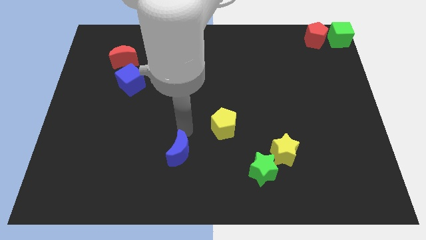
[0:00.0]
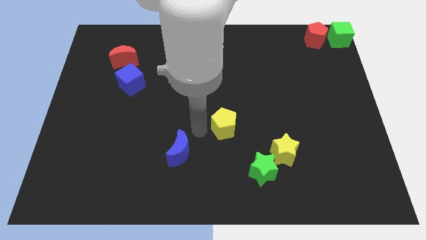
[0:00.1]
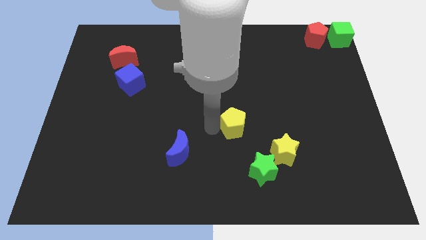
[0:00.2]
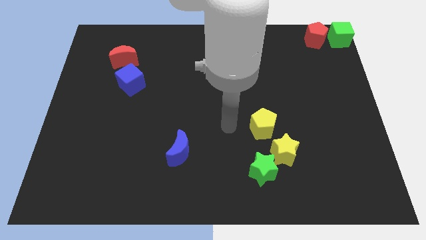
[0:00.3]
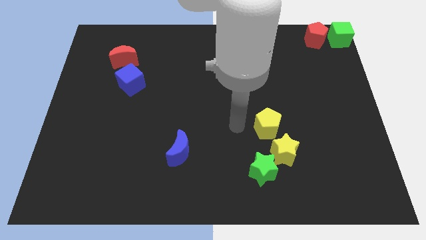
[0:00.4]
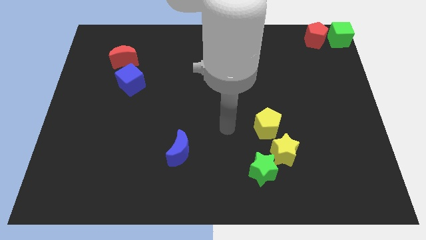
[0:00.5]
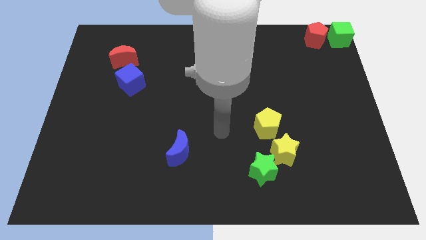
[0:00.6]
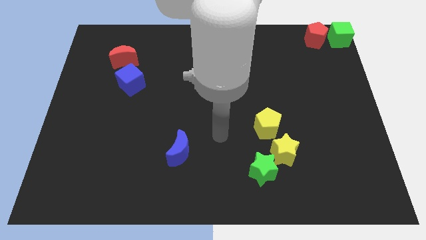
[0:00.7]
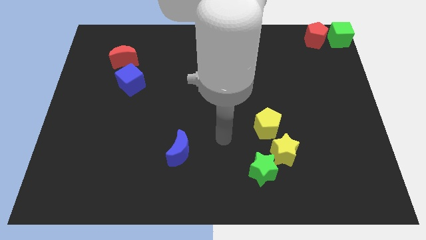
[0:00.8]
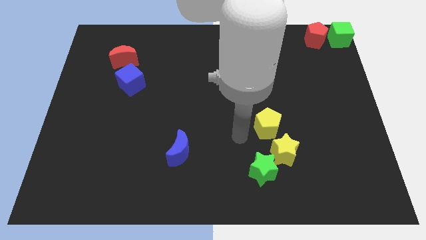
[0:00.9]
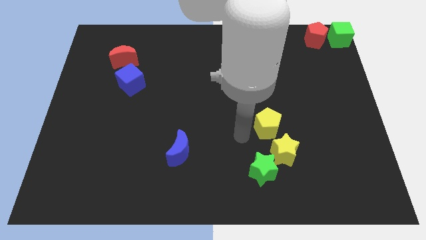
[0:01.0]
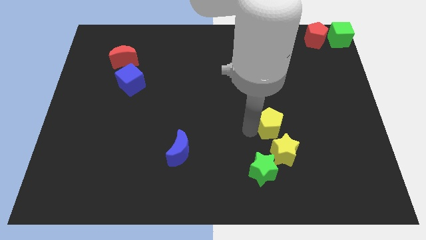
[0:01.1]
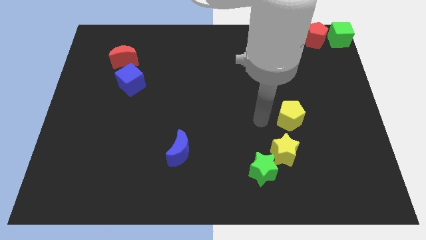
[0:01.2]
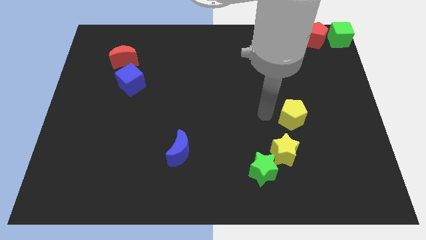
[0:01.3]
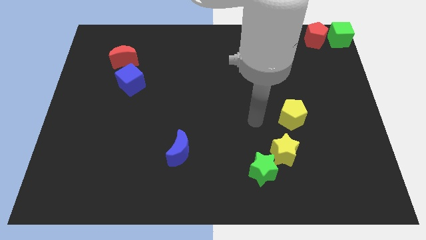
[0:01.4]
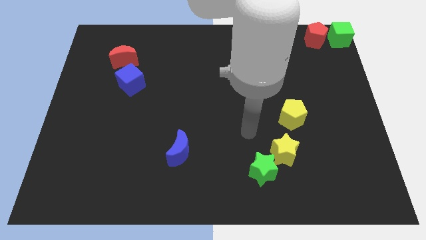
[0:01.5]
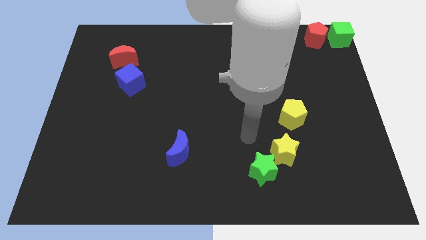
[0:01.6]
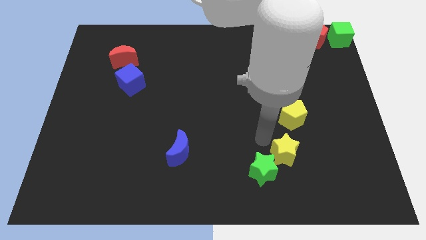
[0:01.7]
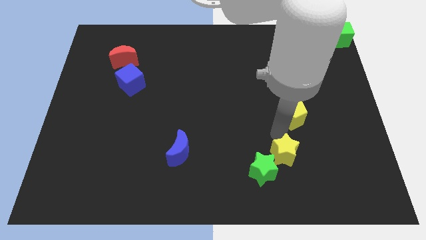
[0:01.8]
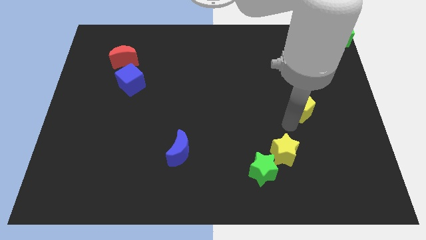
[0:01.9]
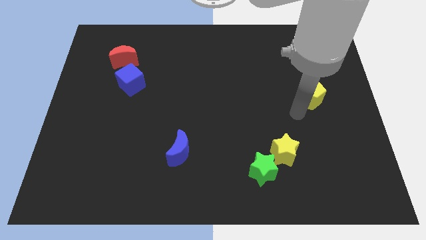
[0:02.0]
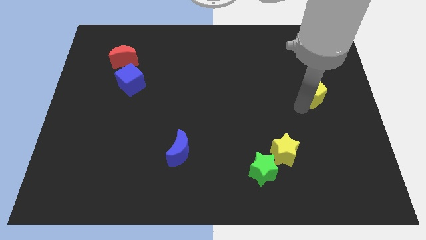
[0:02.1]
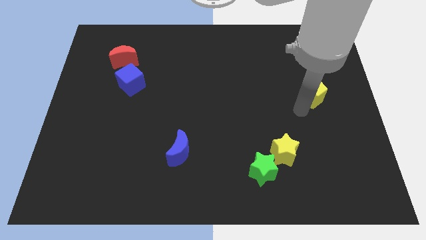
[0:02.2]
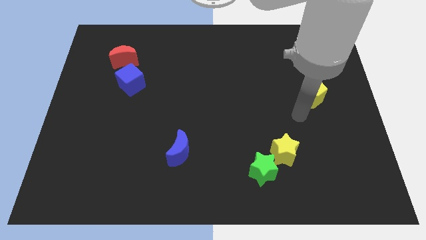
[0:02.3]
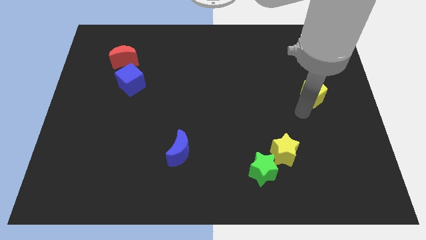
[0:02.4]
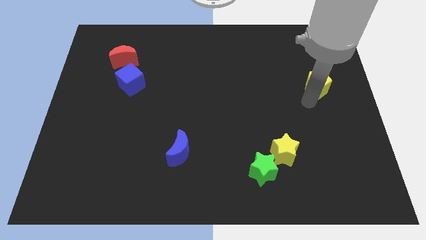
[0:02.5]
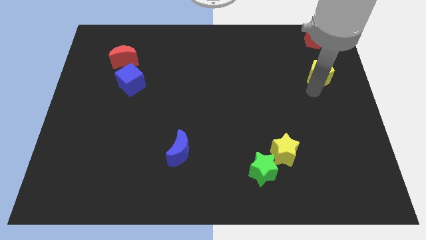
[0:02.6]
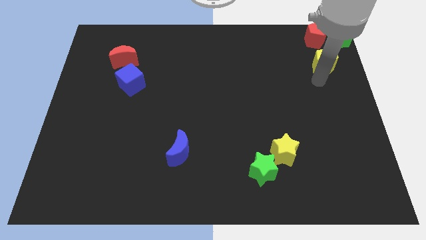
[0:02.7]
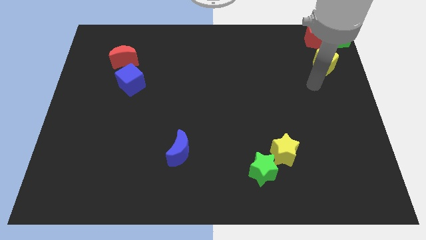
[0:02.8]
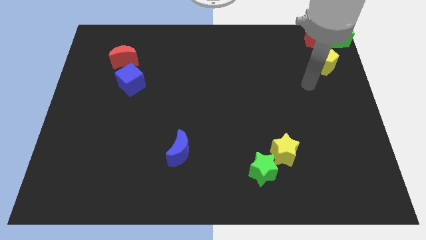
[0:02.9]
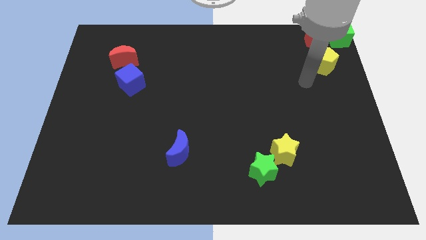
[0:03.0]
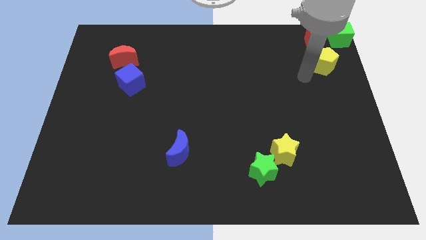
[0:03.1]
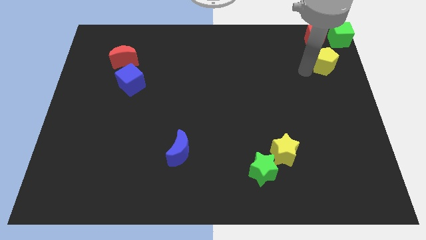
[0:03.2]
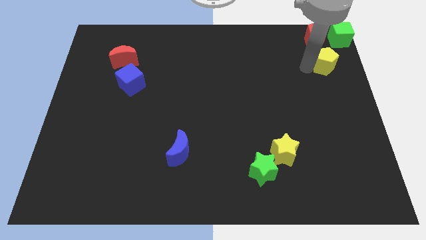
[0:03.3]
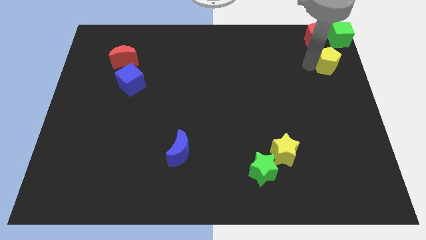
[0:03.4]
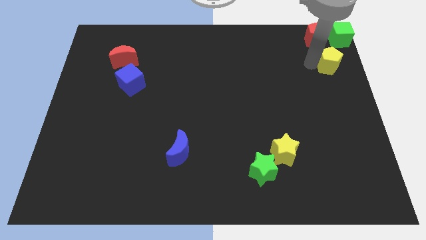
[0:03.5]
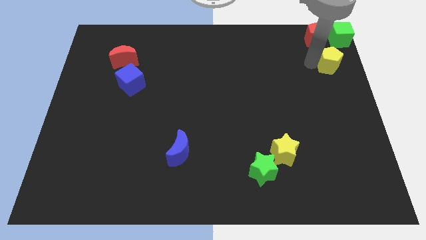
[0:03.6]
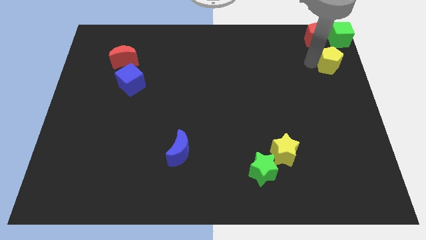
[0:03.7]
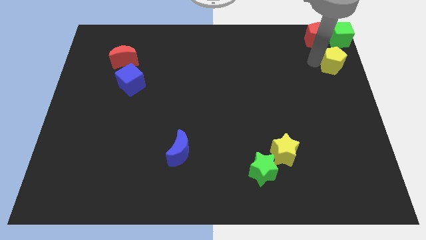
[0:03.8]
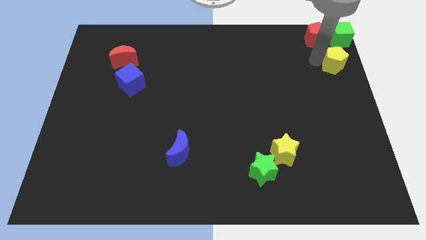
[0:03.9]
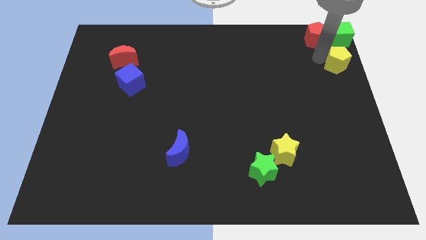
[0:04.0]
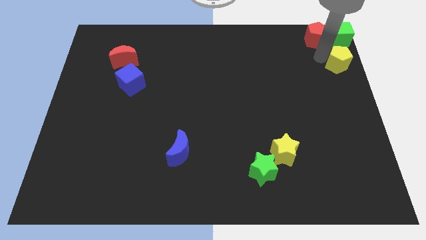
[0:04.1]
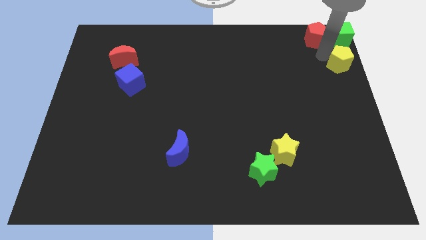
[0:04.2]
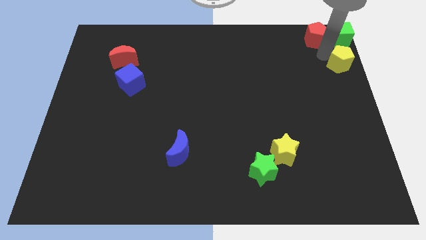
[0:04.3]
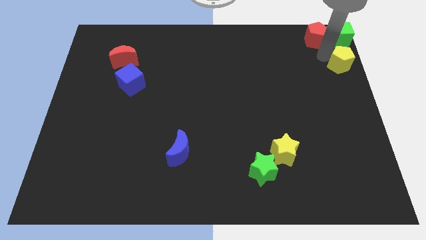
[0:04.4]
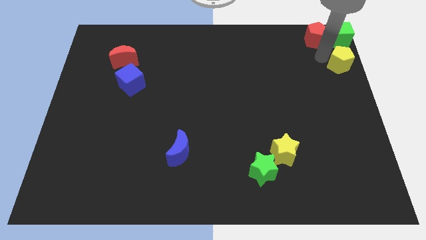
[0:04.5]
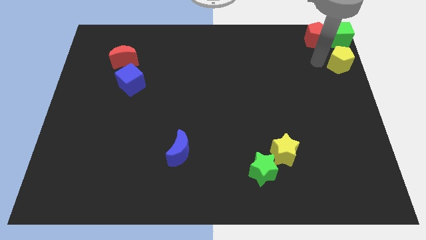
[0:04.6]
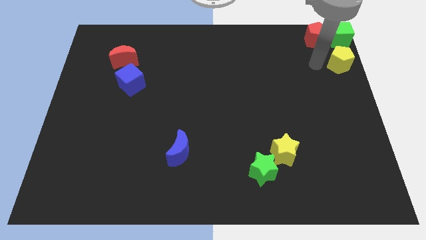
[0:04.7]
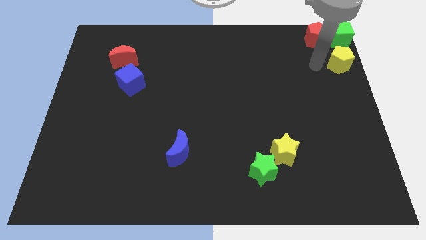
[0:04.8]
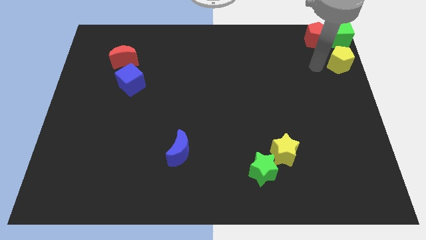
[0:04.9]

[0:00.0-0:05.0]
put the yellow pentagon below the green cube

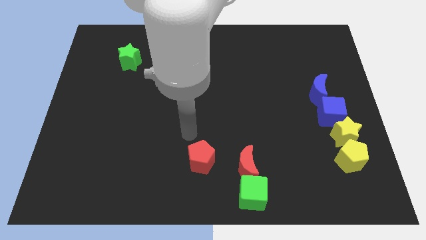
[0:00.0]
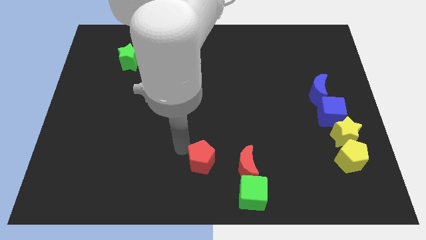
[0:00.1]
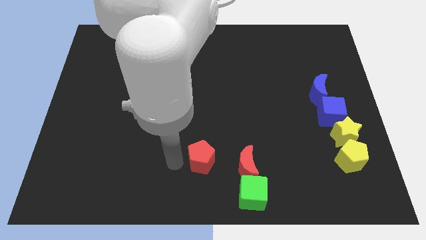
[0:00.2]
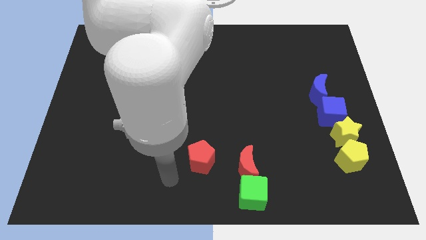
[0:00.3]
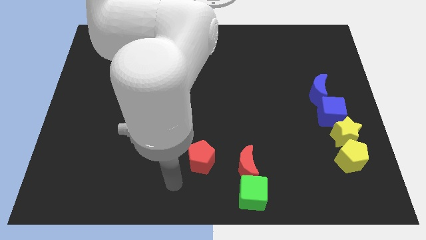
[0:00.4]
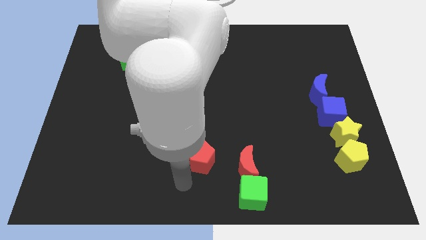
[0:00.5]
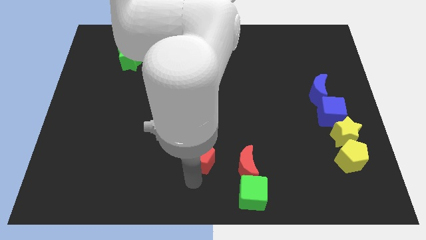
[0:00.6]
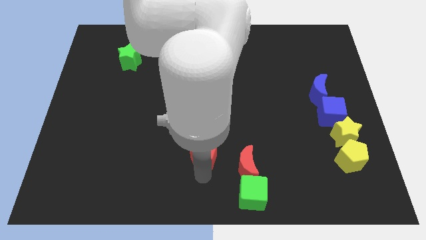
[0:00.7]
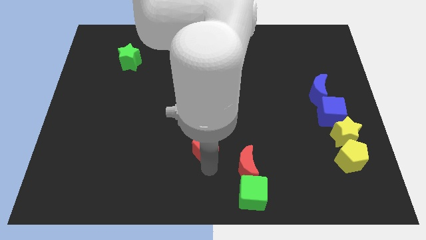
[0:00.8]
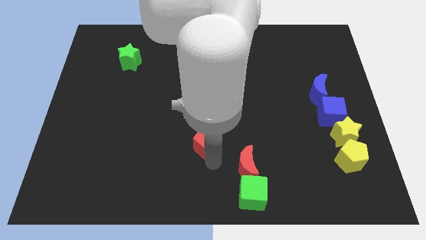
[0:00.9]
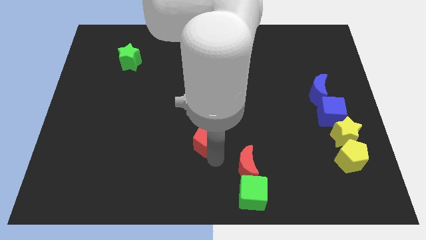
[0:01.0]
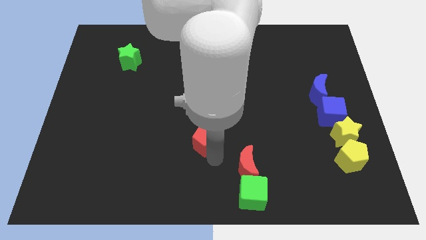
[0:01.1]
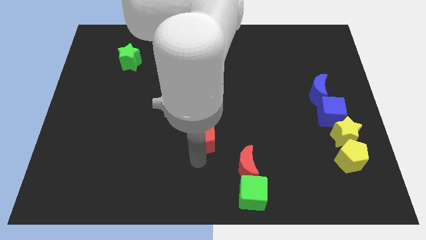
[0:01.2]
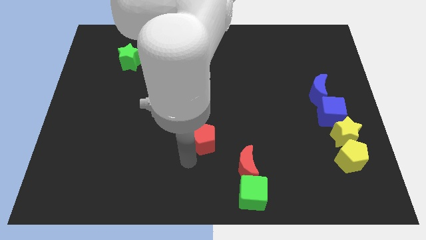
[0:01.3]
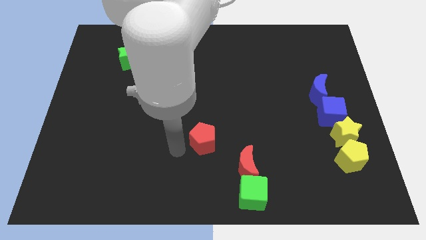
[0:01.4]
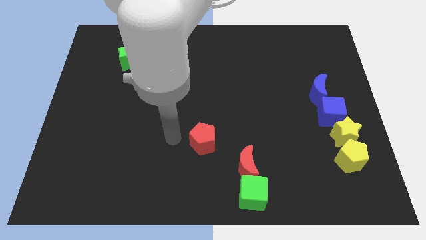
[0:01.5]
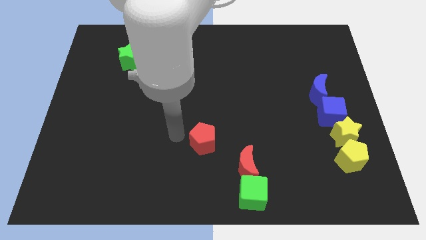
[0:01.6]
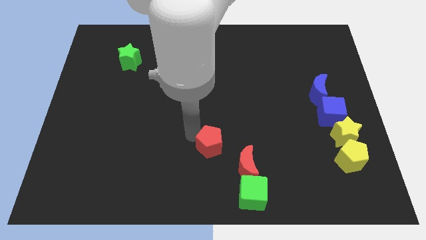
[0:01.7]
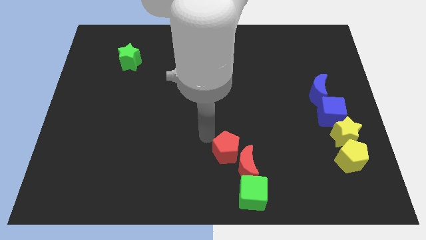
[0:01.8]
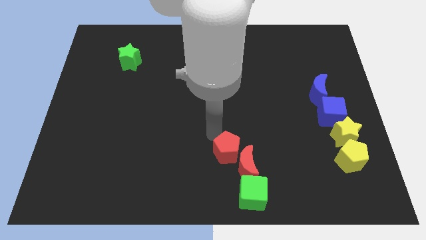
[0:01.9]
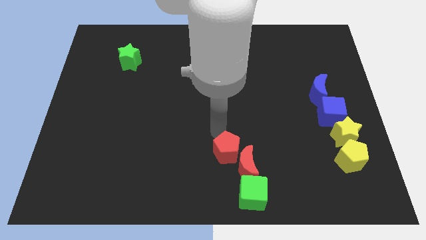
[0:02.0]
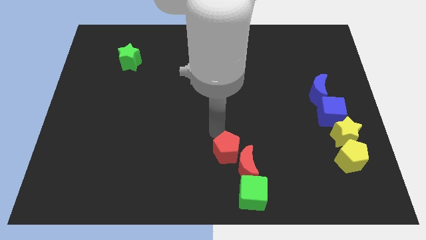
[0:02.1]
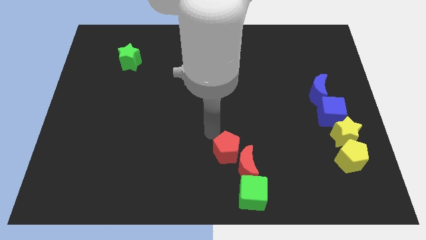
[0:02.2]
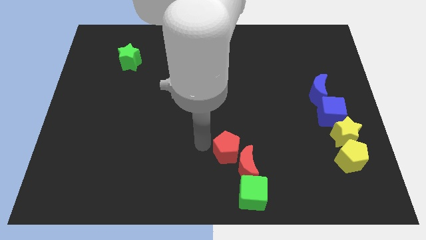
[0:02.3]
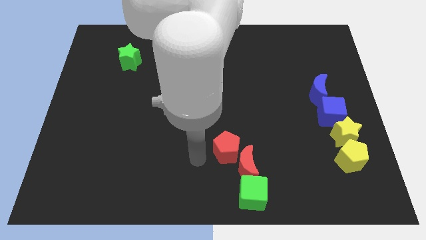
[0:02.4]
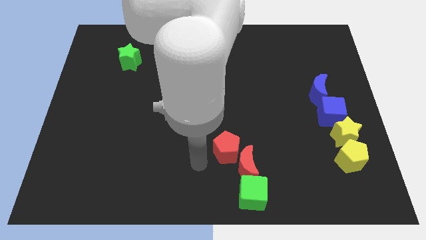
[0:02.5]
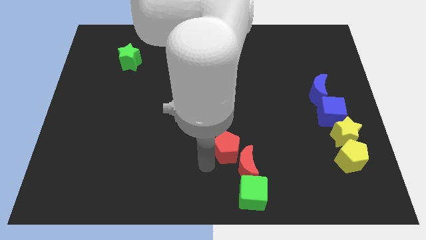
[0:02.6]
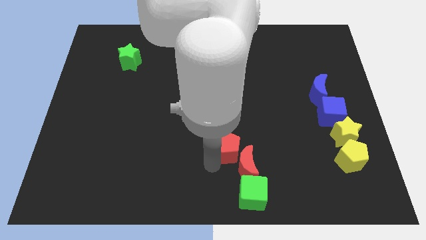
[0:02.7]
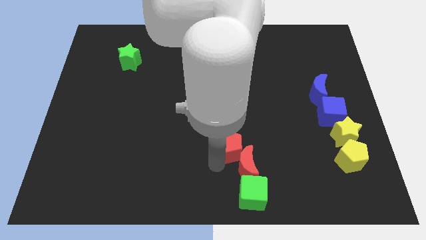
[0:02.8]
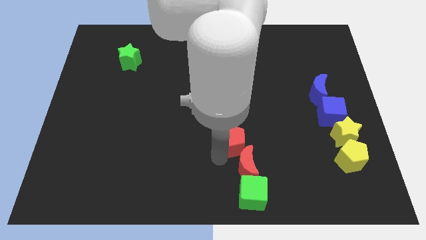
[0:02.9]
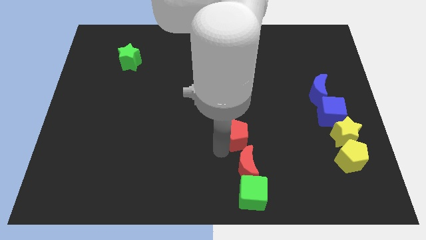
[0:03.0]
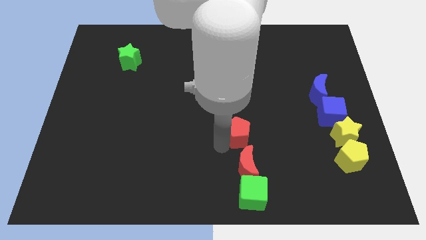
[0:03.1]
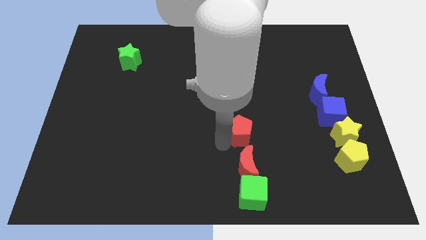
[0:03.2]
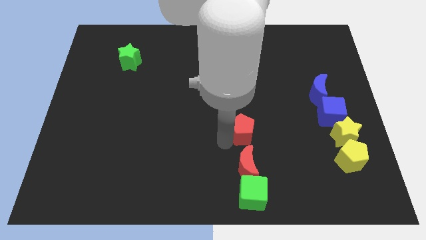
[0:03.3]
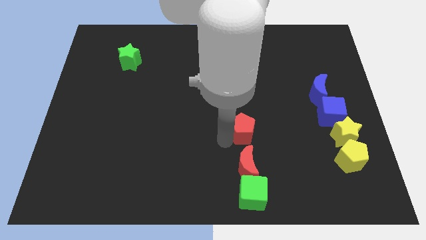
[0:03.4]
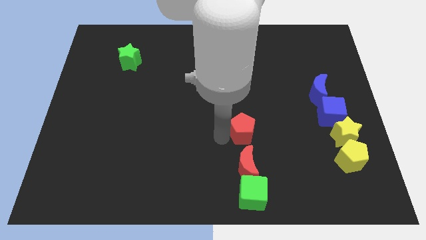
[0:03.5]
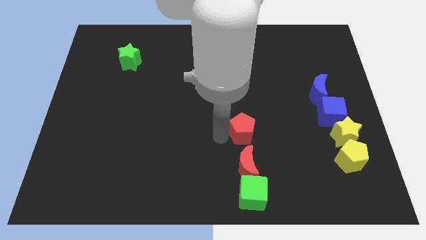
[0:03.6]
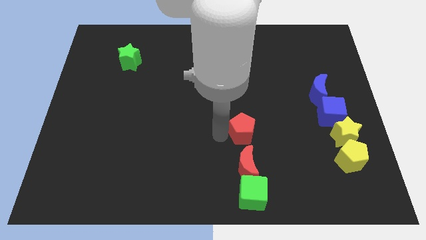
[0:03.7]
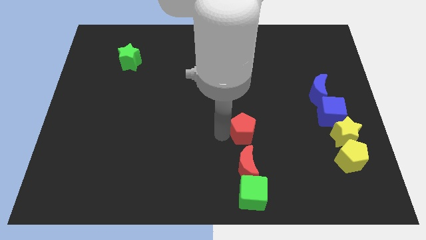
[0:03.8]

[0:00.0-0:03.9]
place the red pentagon above the red moon
